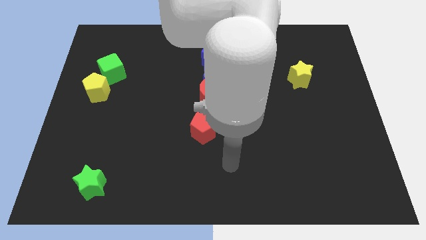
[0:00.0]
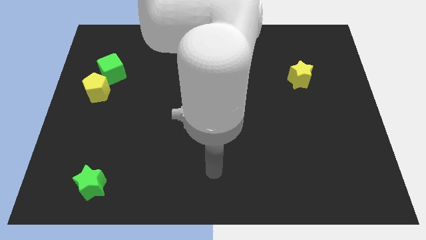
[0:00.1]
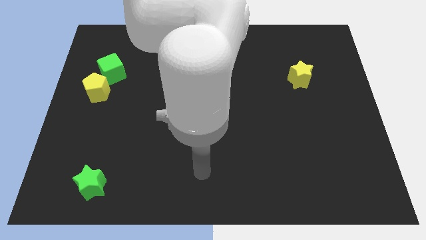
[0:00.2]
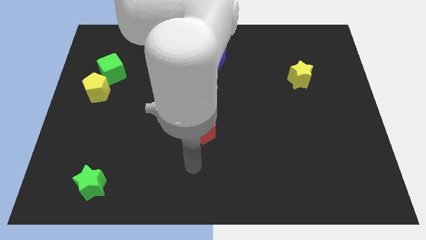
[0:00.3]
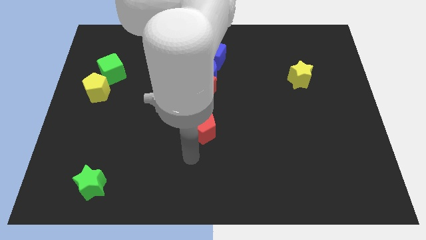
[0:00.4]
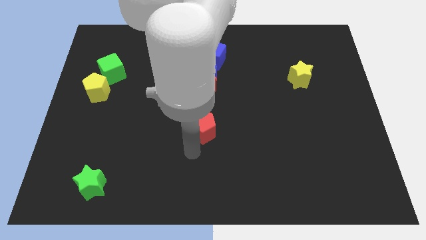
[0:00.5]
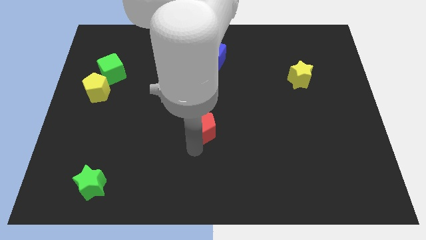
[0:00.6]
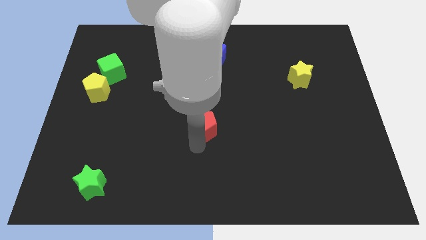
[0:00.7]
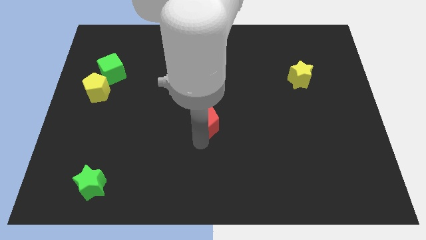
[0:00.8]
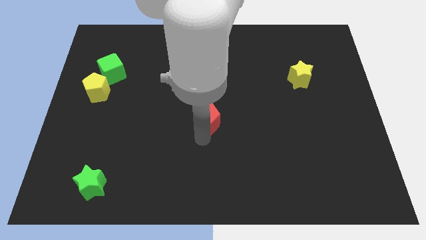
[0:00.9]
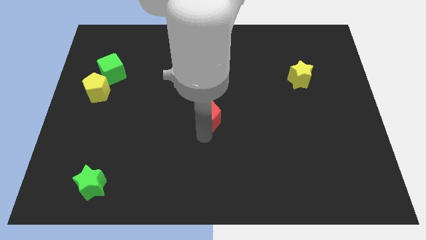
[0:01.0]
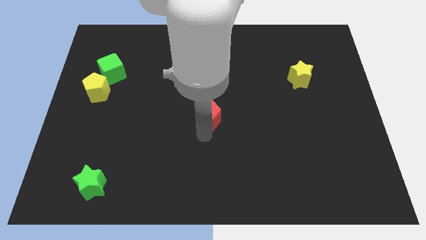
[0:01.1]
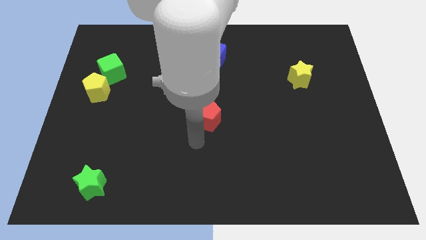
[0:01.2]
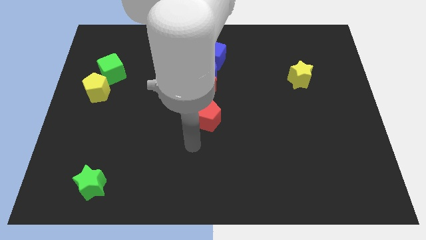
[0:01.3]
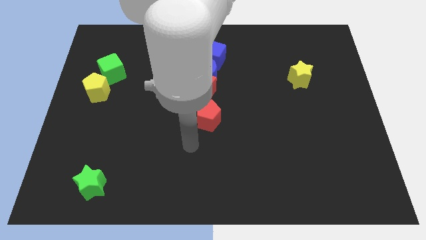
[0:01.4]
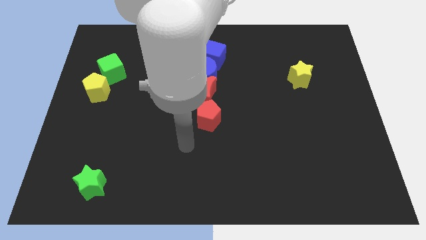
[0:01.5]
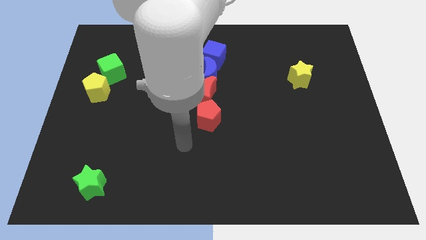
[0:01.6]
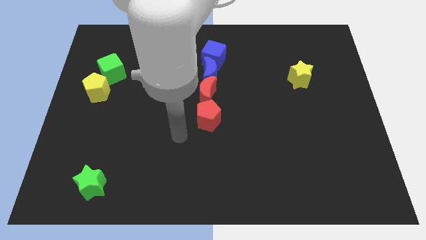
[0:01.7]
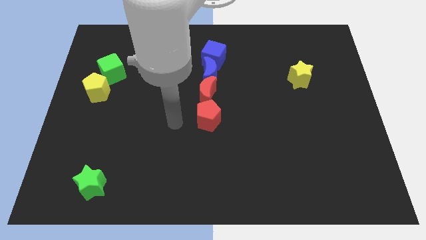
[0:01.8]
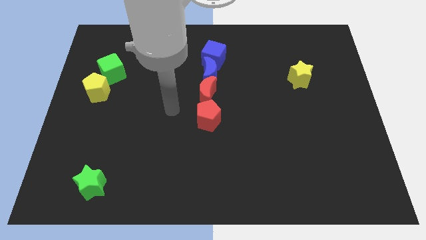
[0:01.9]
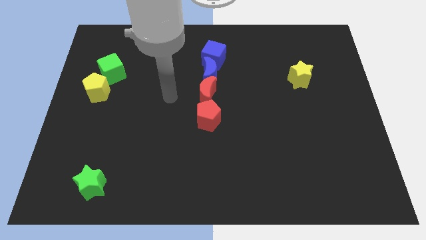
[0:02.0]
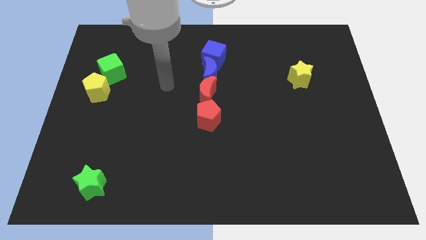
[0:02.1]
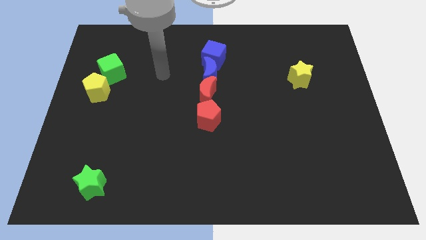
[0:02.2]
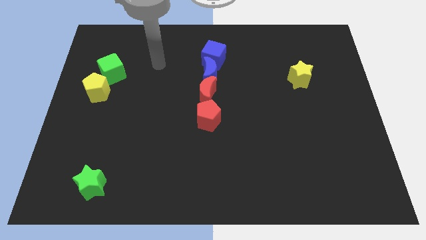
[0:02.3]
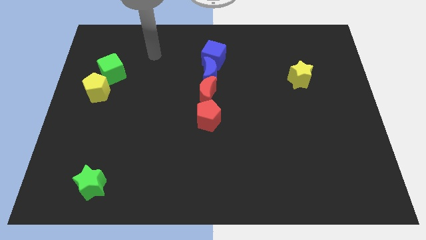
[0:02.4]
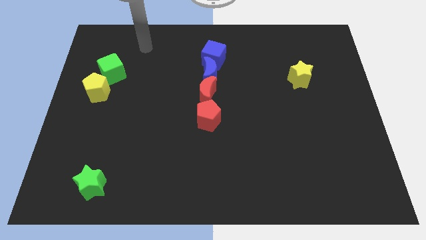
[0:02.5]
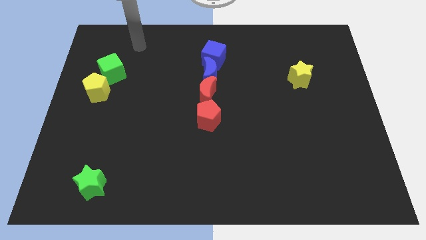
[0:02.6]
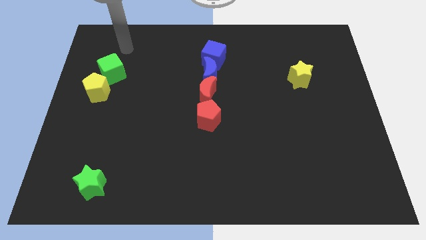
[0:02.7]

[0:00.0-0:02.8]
push red pentagon towards red moon

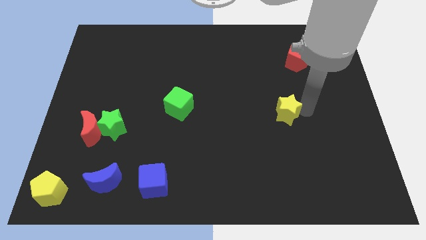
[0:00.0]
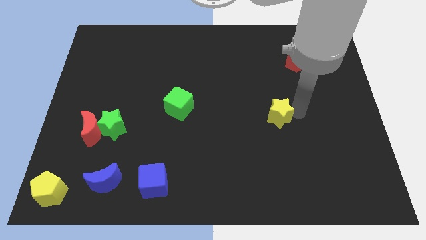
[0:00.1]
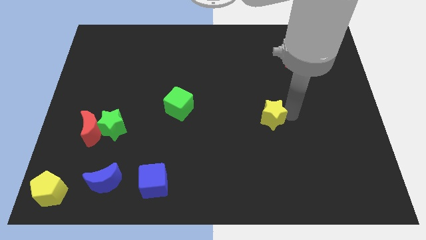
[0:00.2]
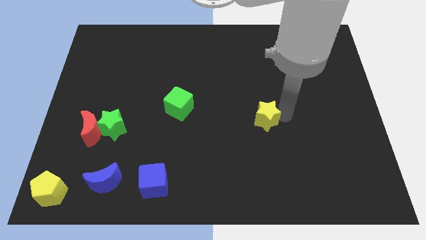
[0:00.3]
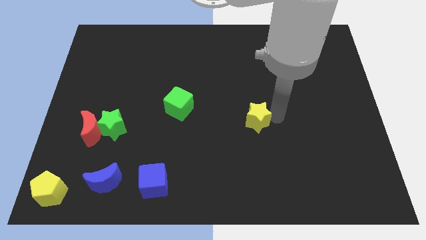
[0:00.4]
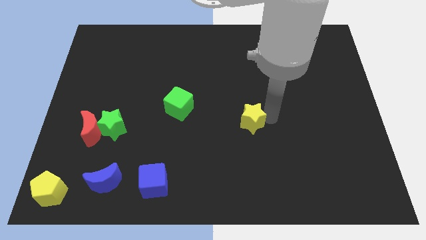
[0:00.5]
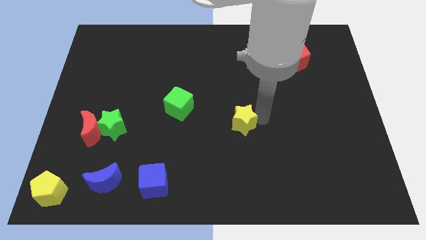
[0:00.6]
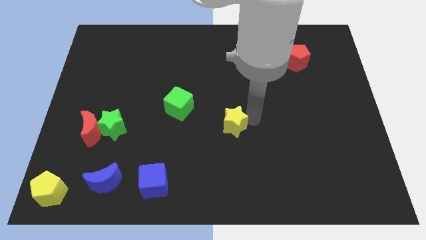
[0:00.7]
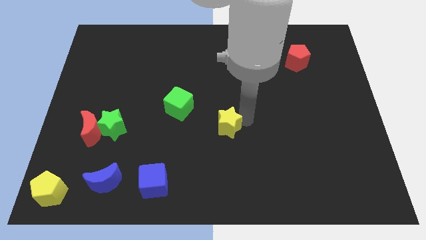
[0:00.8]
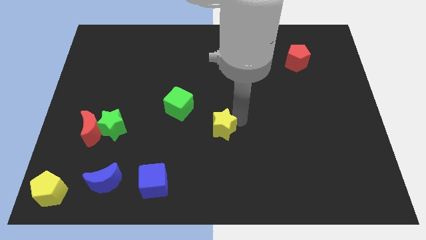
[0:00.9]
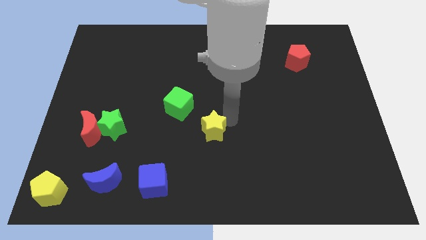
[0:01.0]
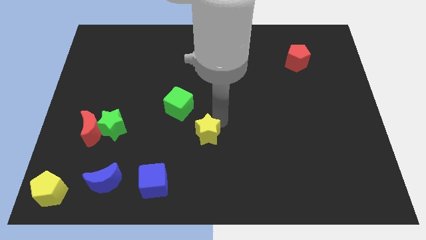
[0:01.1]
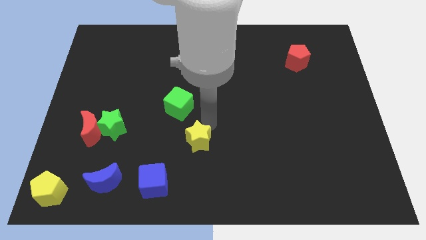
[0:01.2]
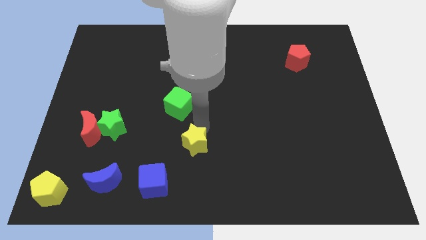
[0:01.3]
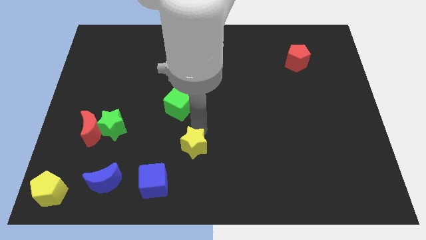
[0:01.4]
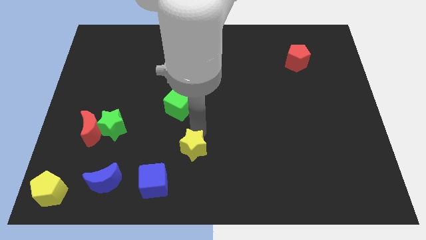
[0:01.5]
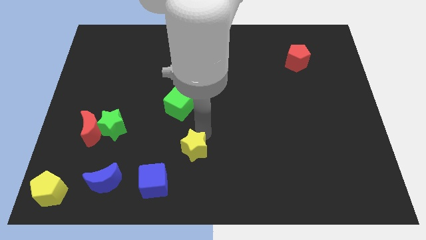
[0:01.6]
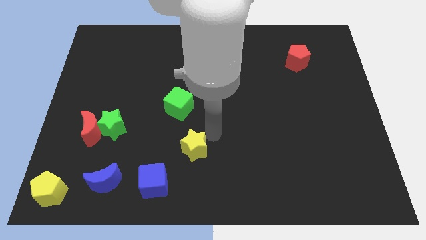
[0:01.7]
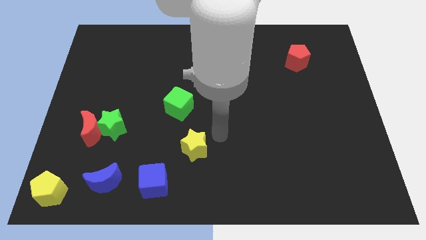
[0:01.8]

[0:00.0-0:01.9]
move the yellow star below the green cube

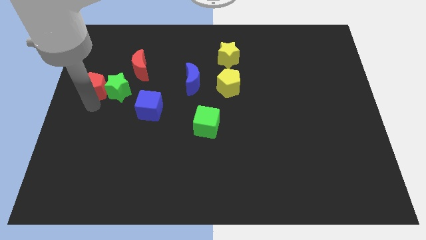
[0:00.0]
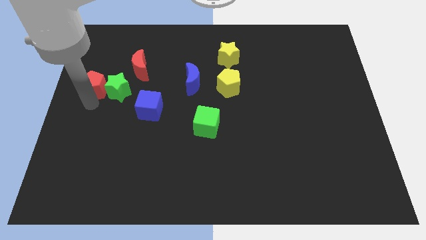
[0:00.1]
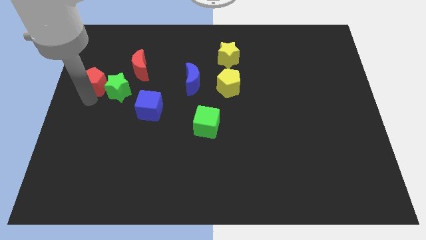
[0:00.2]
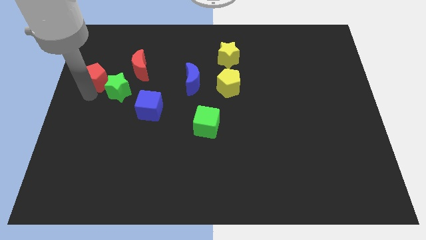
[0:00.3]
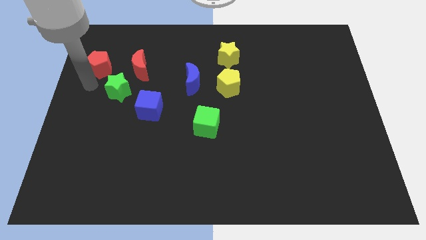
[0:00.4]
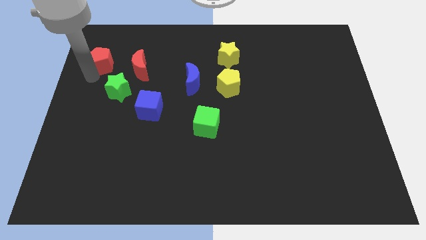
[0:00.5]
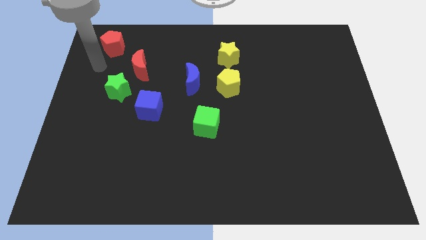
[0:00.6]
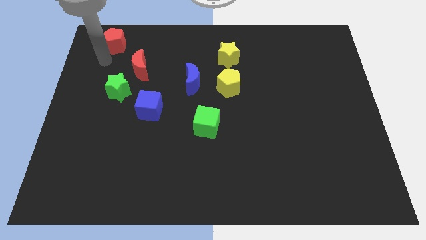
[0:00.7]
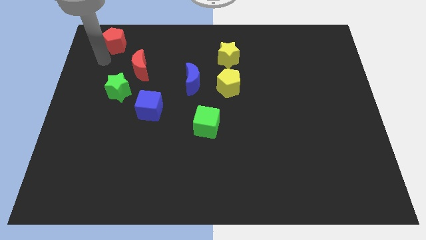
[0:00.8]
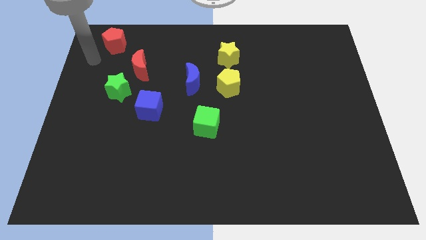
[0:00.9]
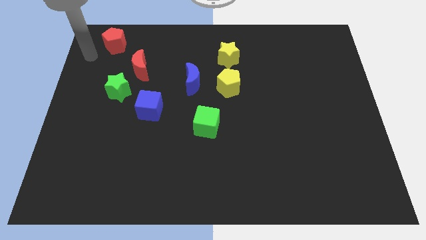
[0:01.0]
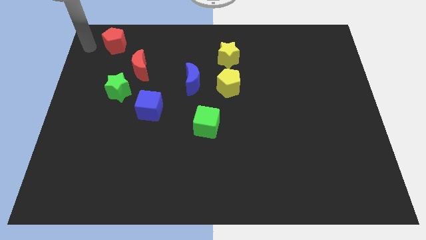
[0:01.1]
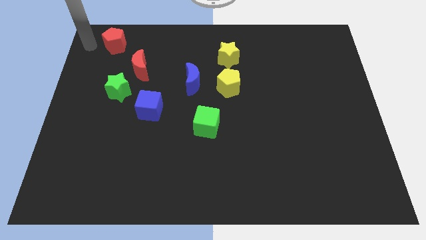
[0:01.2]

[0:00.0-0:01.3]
push red pentagon above green star

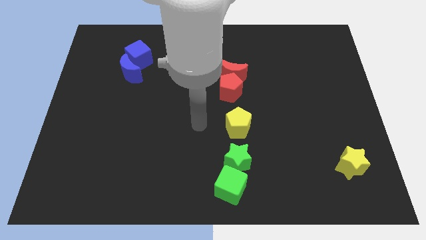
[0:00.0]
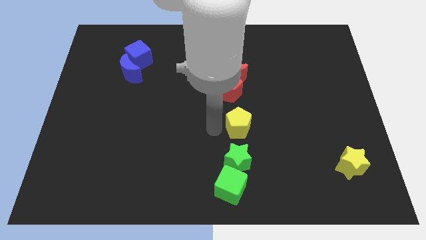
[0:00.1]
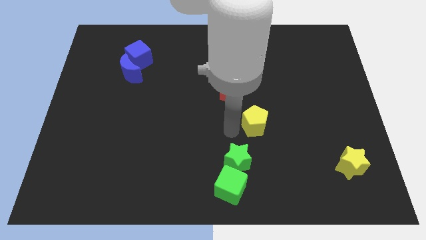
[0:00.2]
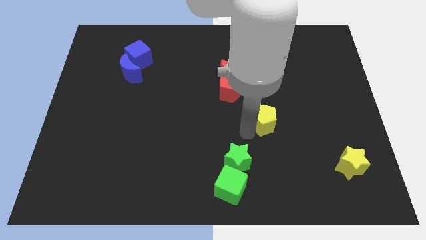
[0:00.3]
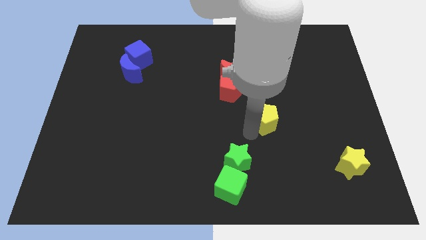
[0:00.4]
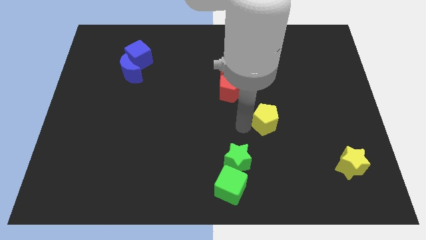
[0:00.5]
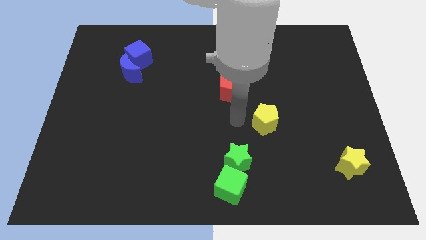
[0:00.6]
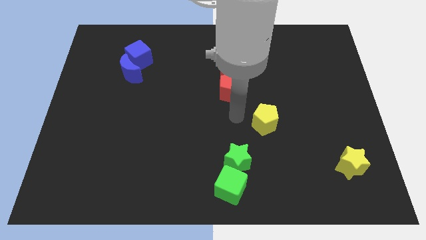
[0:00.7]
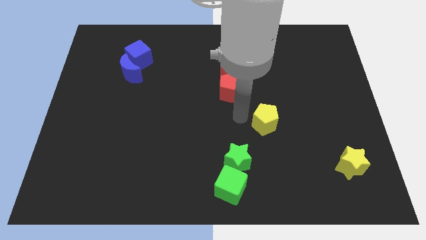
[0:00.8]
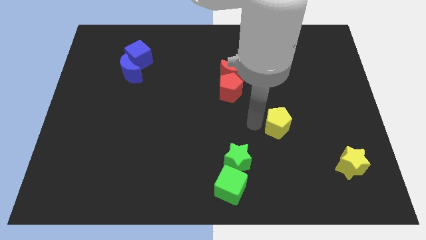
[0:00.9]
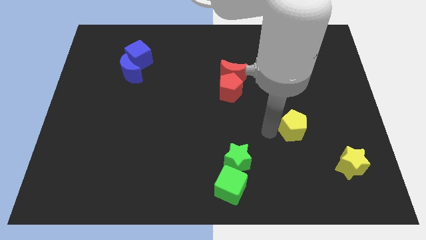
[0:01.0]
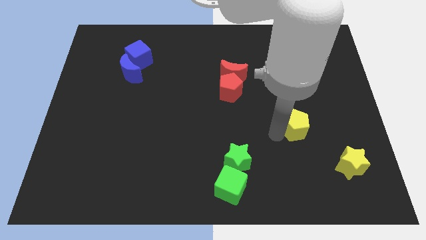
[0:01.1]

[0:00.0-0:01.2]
move the yellow pentagon towards the center right of the board

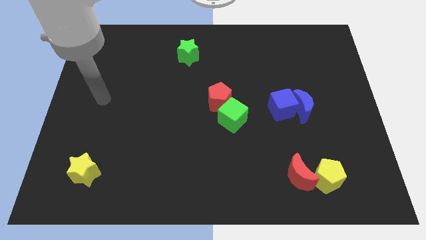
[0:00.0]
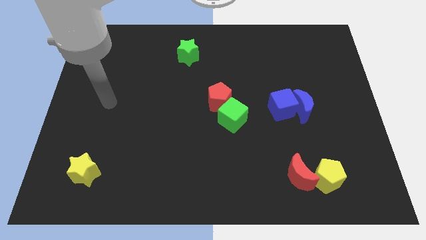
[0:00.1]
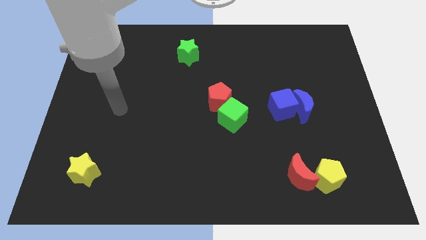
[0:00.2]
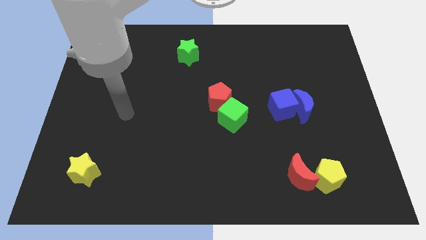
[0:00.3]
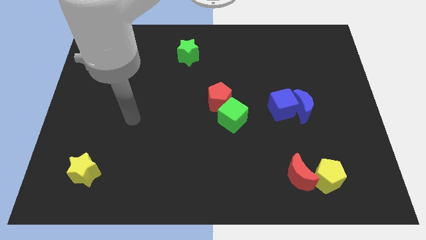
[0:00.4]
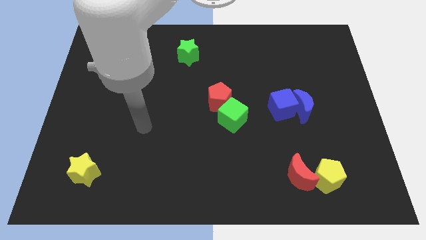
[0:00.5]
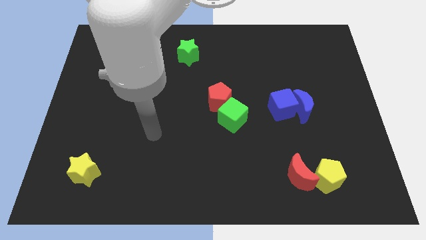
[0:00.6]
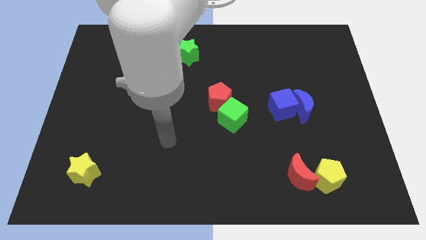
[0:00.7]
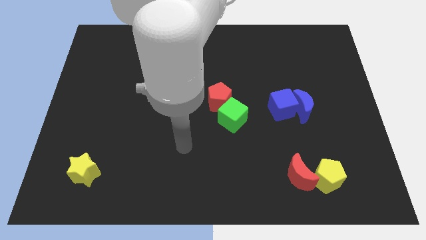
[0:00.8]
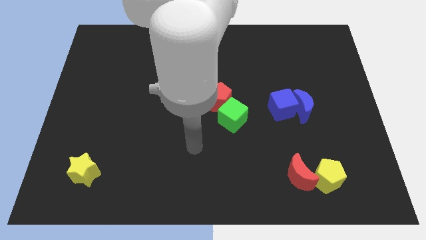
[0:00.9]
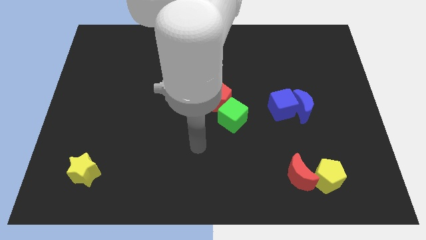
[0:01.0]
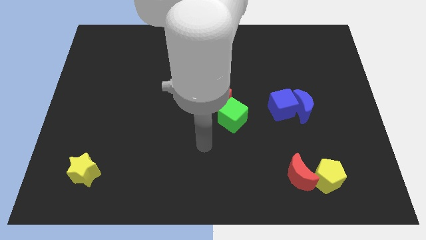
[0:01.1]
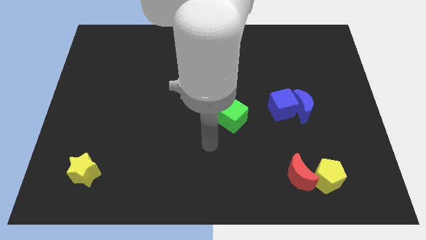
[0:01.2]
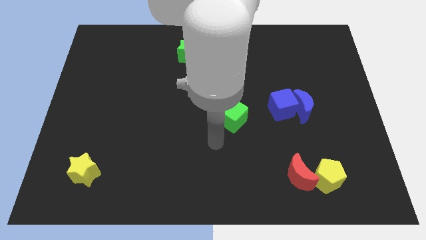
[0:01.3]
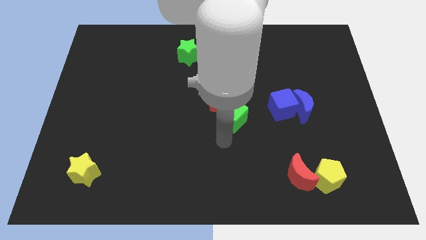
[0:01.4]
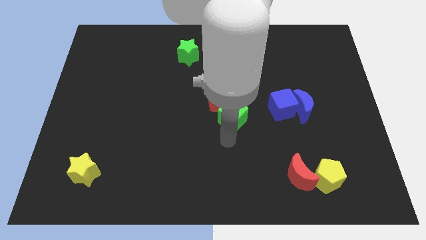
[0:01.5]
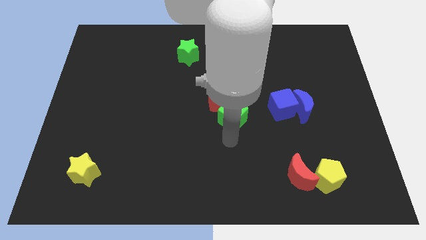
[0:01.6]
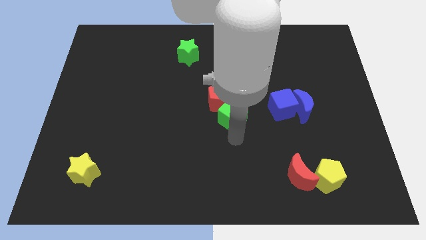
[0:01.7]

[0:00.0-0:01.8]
point your arm at the bottom side of the green cube
